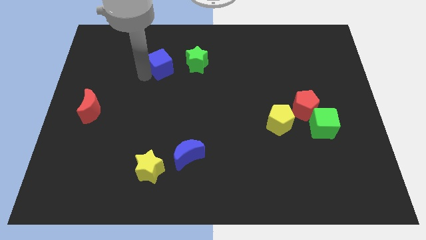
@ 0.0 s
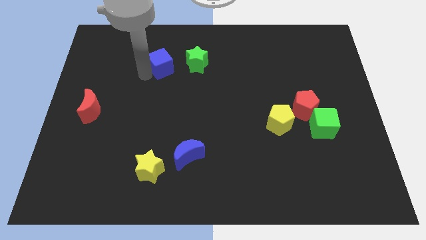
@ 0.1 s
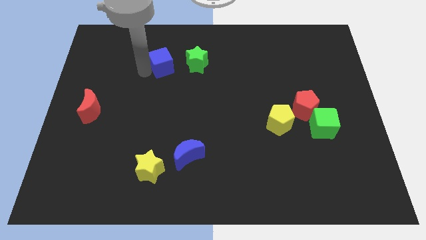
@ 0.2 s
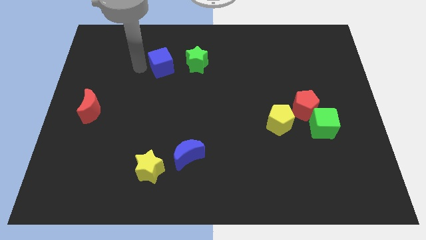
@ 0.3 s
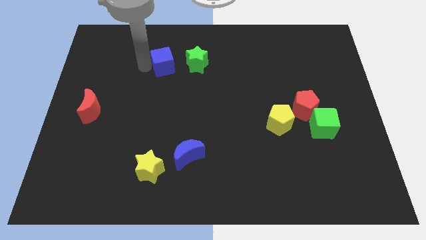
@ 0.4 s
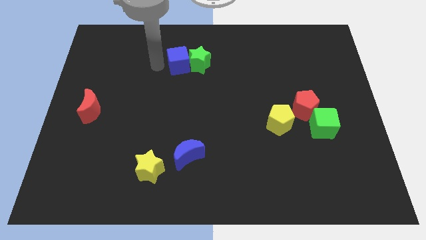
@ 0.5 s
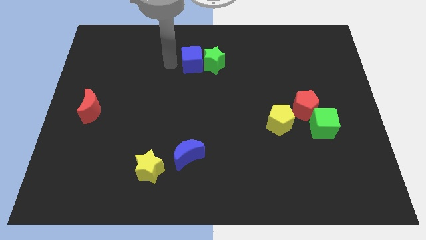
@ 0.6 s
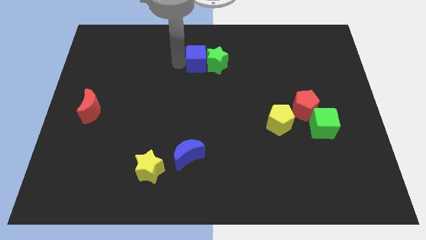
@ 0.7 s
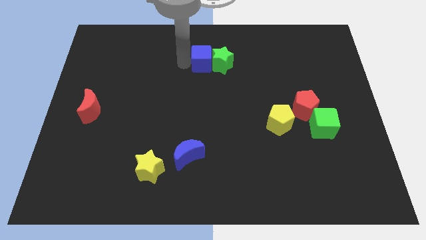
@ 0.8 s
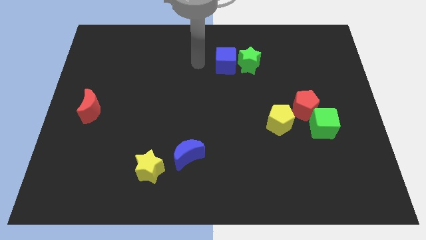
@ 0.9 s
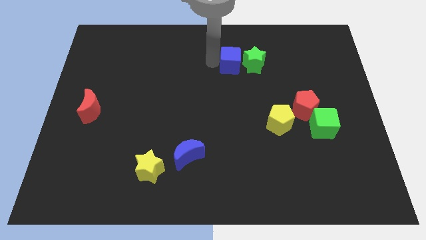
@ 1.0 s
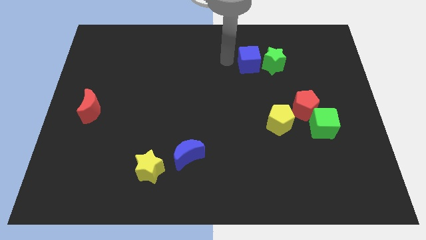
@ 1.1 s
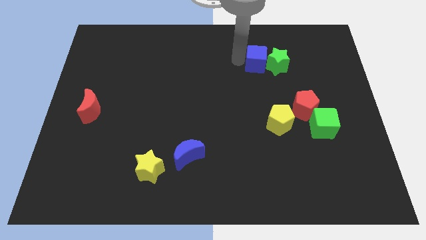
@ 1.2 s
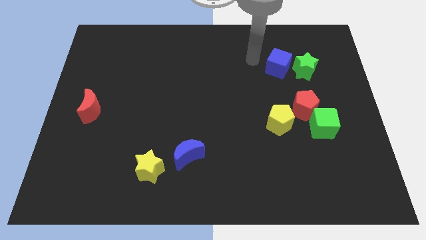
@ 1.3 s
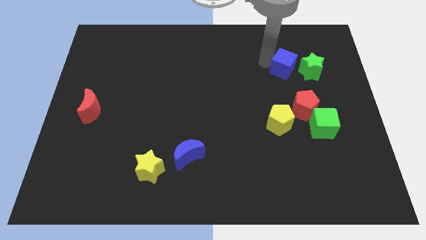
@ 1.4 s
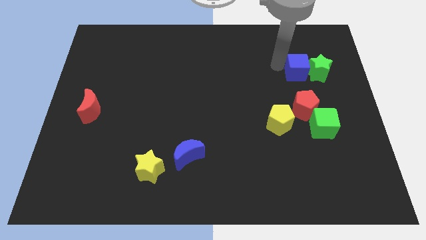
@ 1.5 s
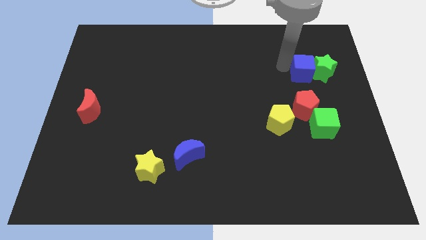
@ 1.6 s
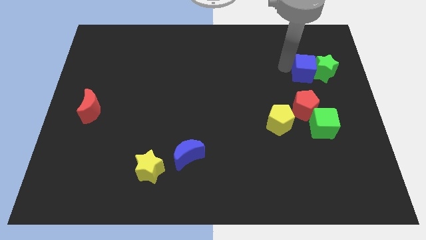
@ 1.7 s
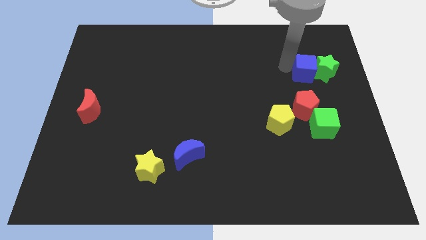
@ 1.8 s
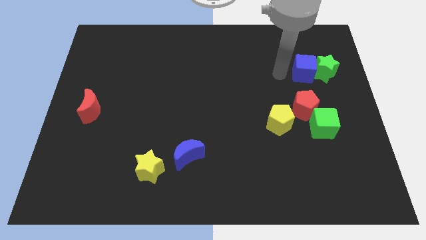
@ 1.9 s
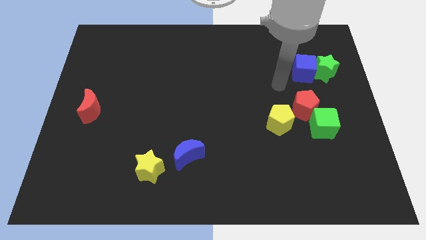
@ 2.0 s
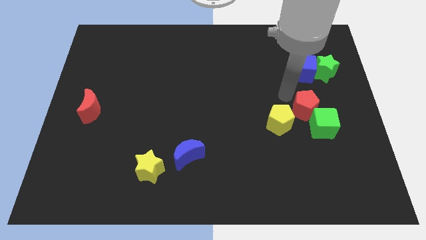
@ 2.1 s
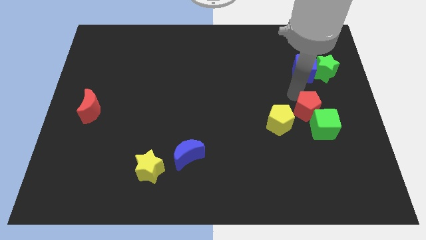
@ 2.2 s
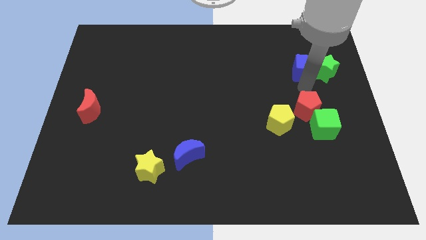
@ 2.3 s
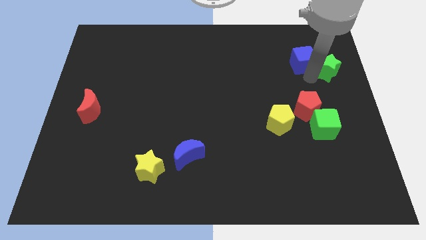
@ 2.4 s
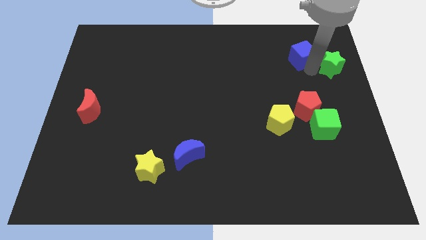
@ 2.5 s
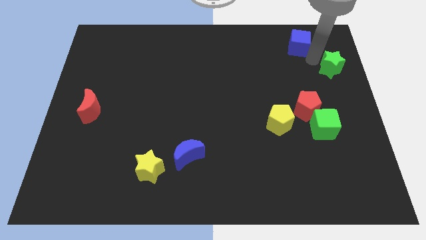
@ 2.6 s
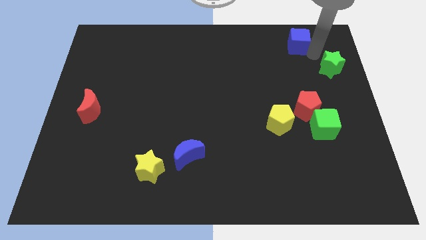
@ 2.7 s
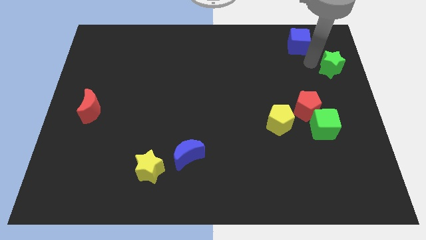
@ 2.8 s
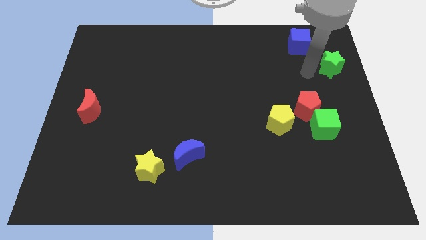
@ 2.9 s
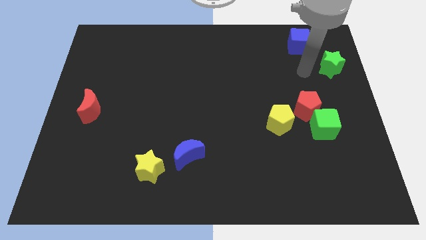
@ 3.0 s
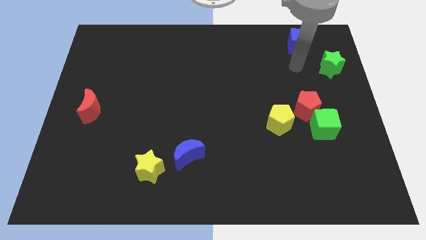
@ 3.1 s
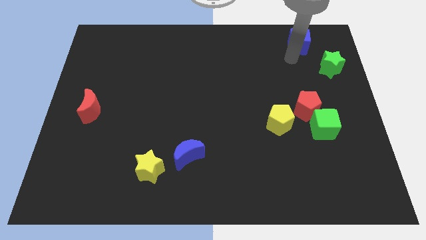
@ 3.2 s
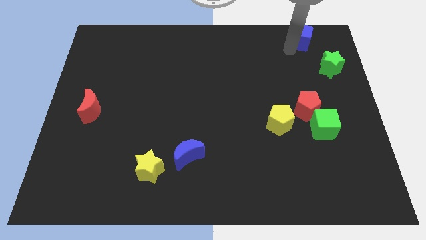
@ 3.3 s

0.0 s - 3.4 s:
slide the blue cube and green star to the top right side of the board

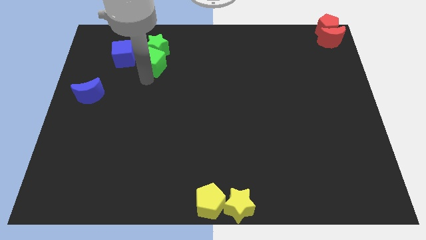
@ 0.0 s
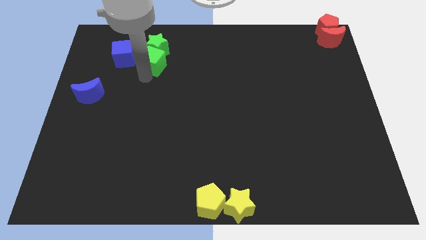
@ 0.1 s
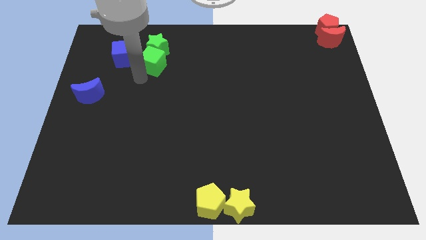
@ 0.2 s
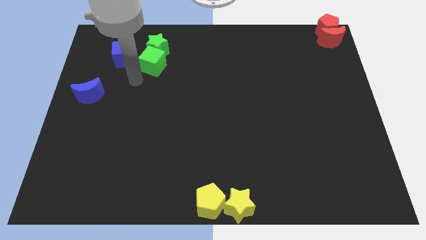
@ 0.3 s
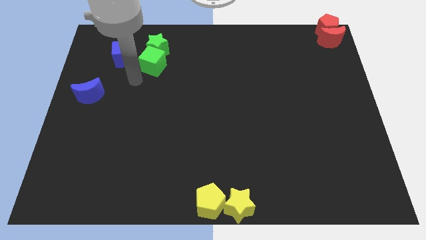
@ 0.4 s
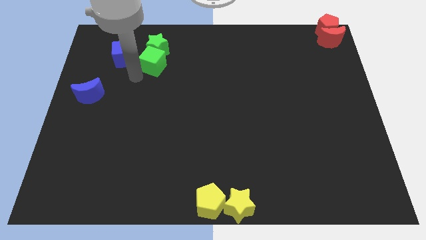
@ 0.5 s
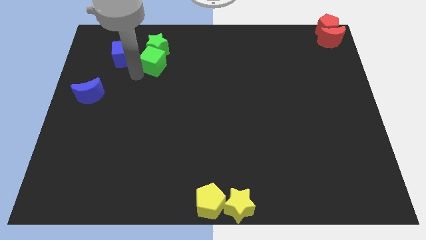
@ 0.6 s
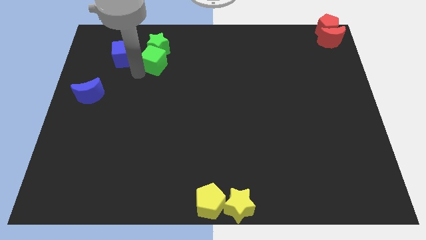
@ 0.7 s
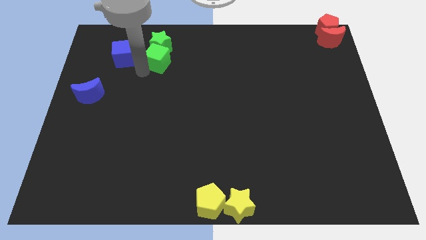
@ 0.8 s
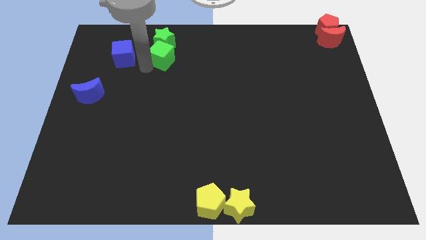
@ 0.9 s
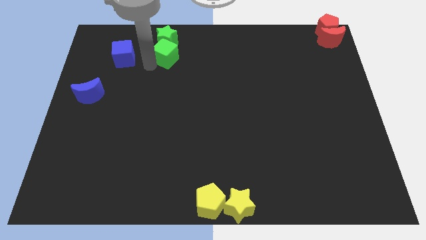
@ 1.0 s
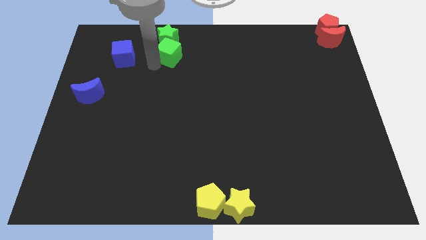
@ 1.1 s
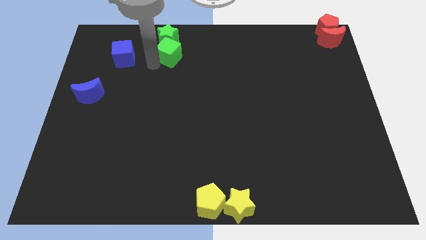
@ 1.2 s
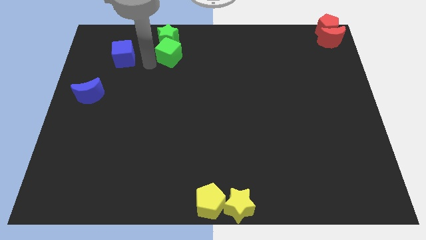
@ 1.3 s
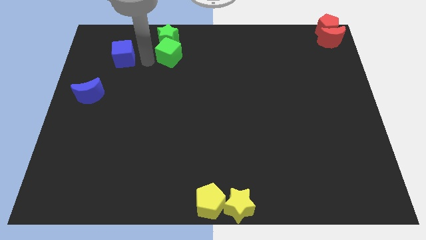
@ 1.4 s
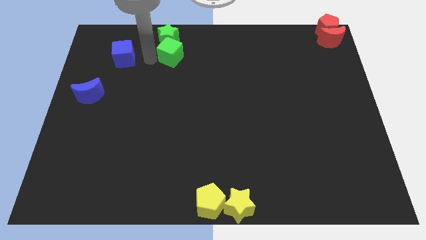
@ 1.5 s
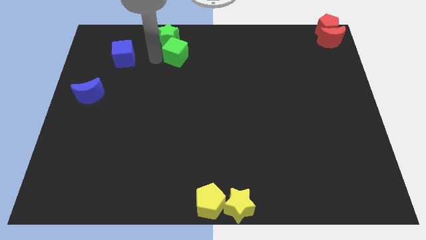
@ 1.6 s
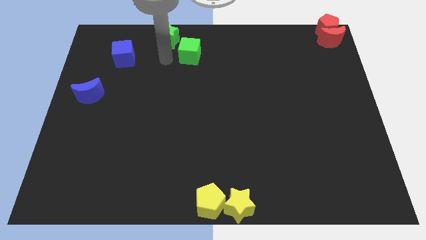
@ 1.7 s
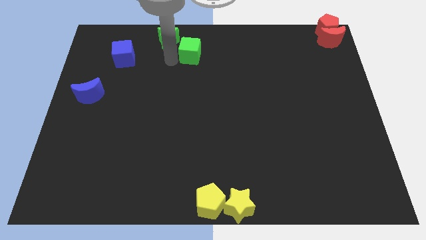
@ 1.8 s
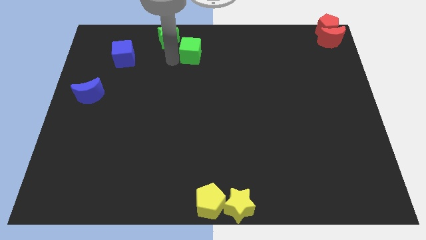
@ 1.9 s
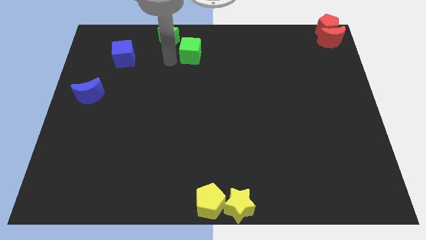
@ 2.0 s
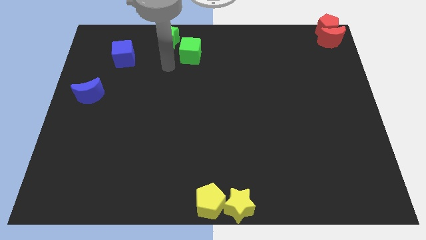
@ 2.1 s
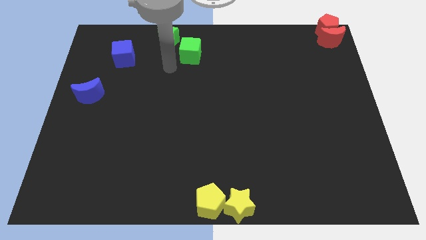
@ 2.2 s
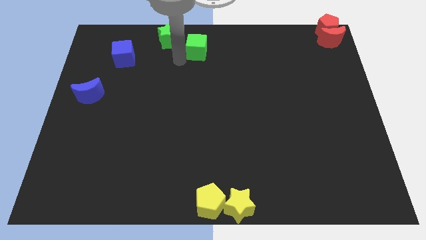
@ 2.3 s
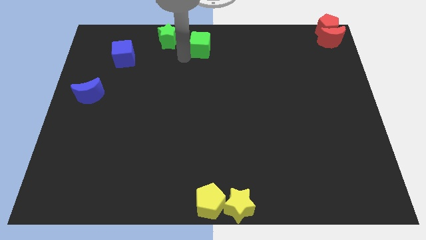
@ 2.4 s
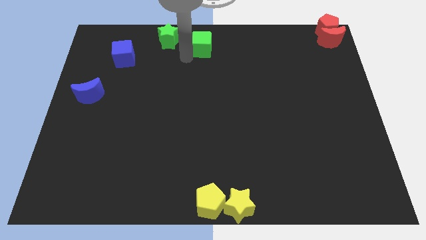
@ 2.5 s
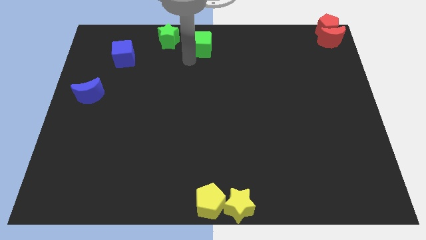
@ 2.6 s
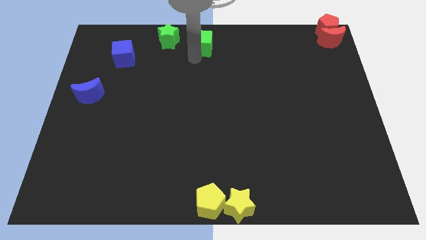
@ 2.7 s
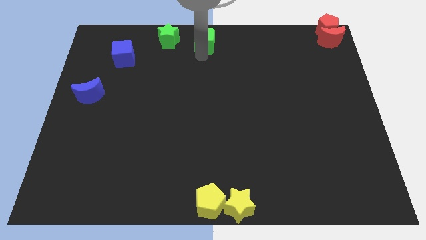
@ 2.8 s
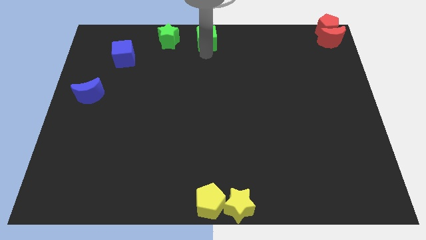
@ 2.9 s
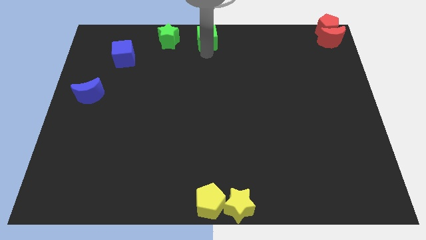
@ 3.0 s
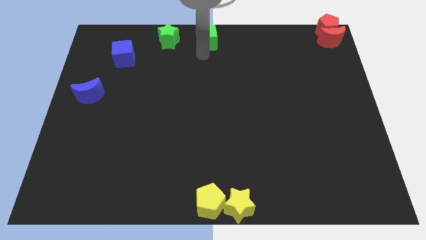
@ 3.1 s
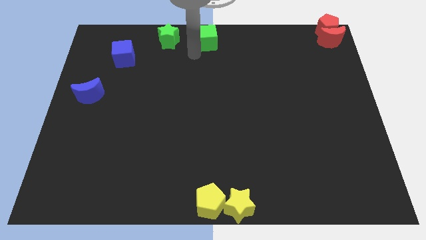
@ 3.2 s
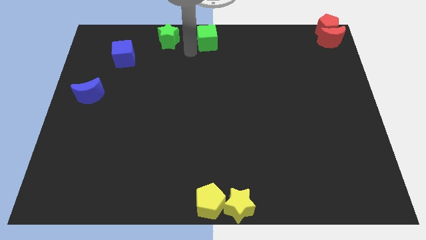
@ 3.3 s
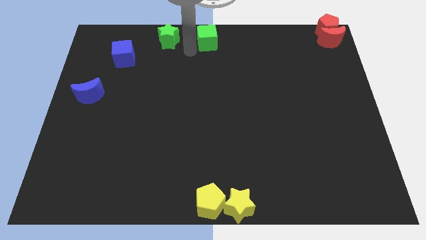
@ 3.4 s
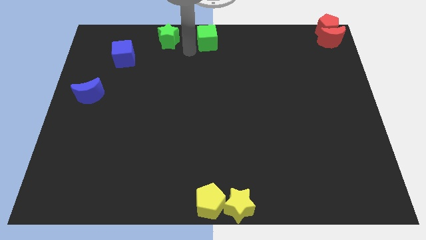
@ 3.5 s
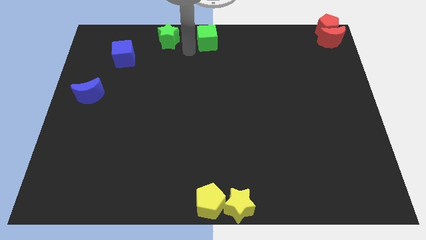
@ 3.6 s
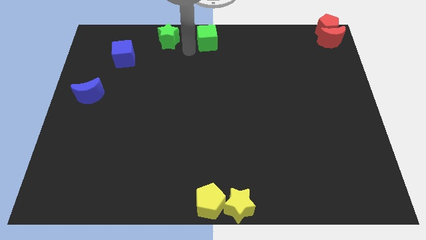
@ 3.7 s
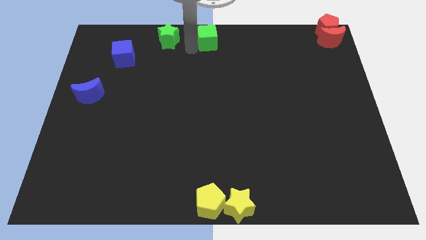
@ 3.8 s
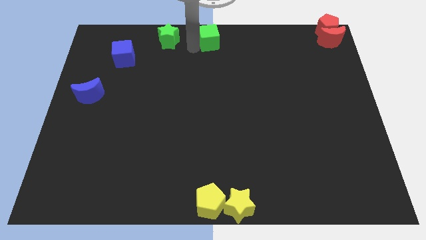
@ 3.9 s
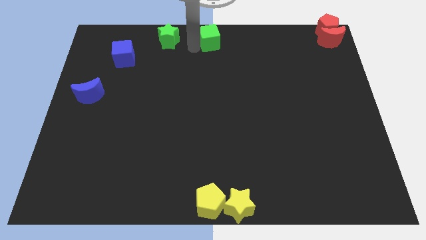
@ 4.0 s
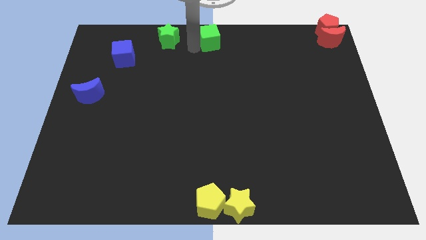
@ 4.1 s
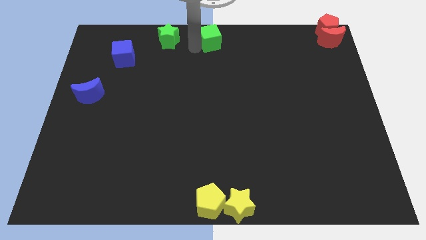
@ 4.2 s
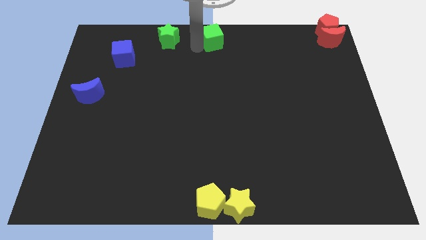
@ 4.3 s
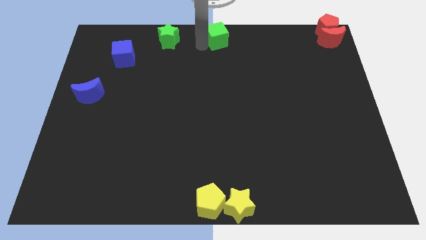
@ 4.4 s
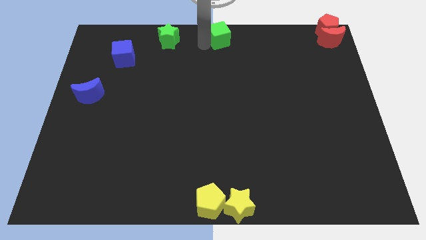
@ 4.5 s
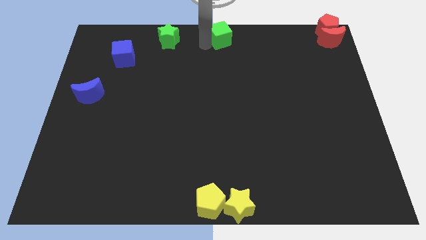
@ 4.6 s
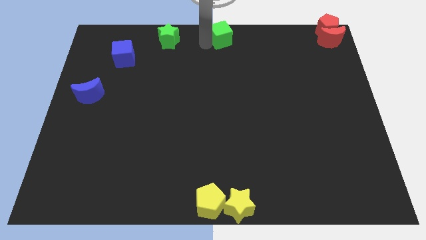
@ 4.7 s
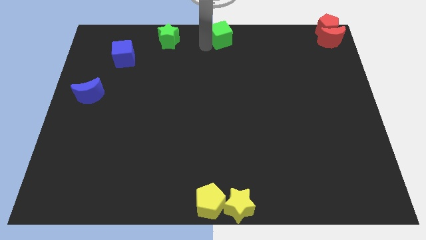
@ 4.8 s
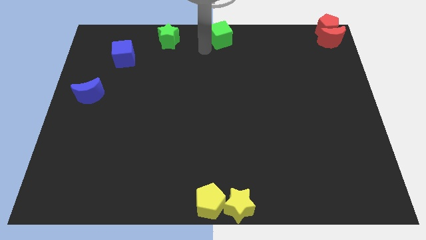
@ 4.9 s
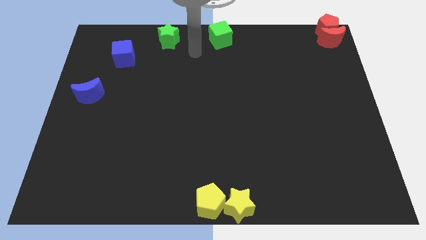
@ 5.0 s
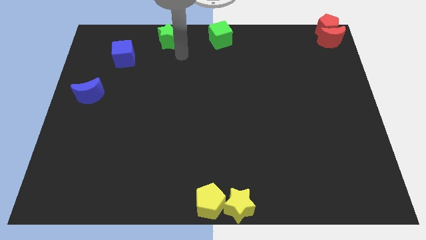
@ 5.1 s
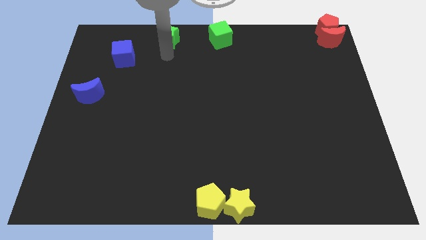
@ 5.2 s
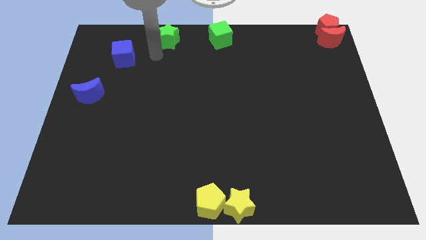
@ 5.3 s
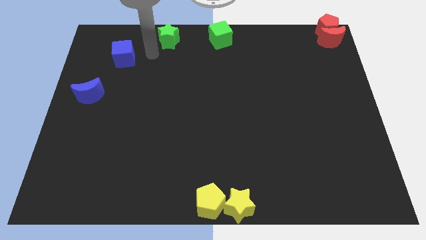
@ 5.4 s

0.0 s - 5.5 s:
push the green cube to the top center
